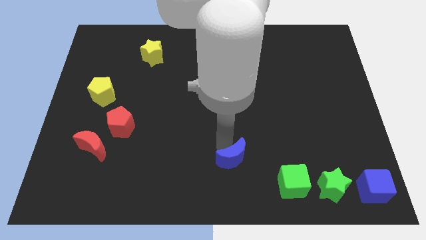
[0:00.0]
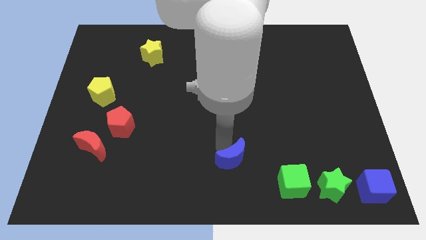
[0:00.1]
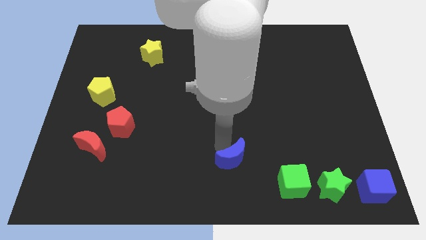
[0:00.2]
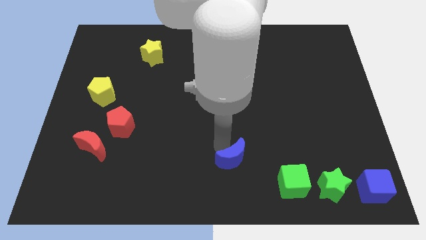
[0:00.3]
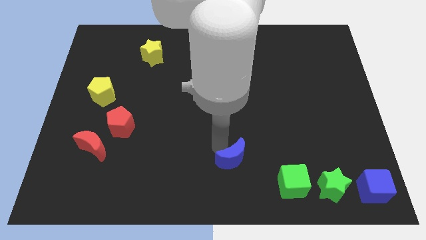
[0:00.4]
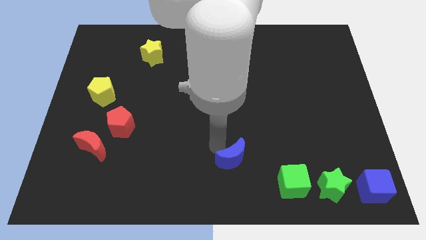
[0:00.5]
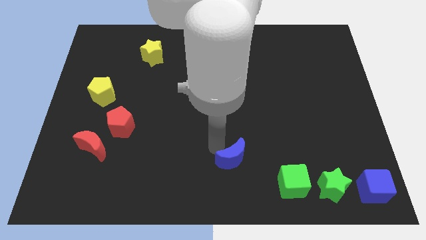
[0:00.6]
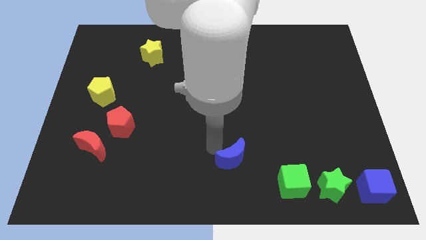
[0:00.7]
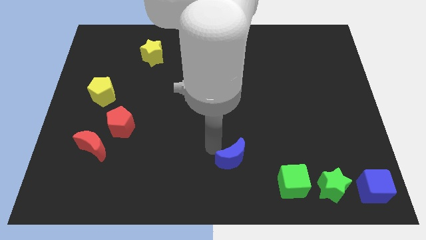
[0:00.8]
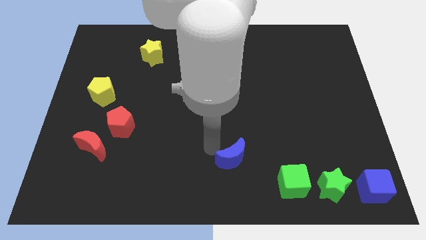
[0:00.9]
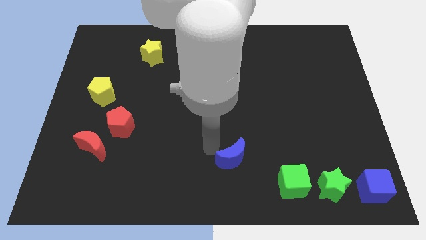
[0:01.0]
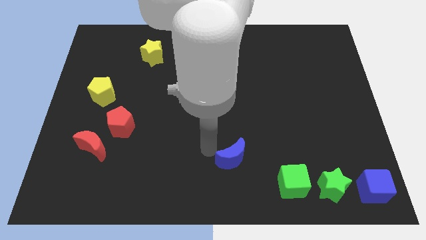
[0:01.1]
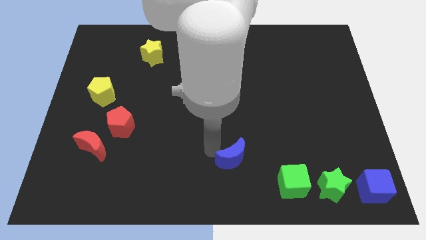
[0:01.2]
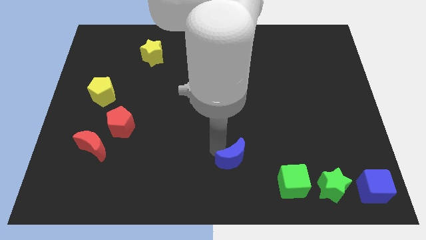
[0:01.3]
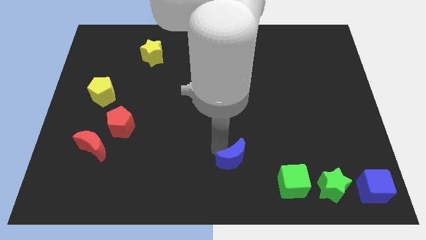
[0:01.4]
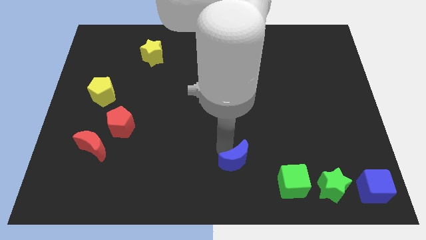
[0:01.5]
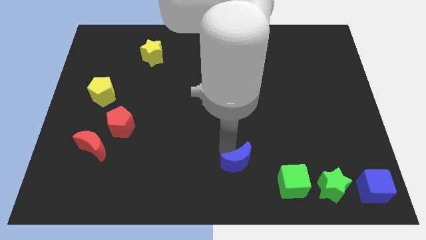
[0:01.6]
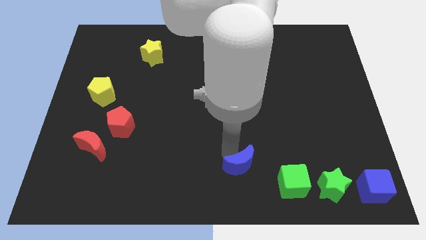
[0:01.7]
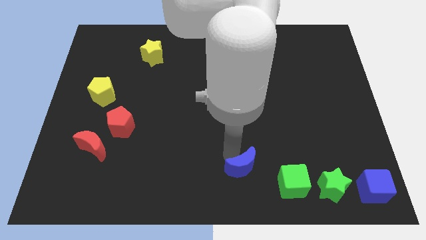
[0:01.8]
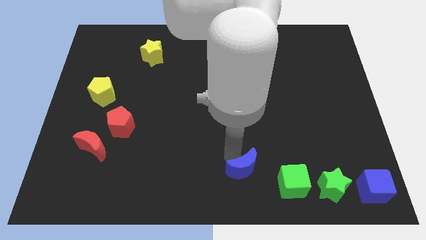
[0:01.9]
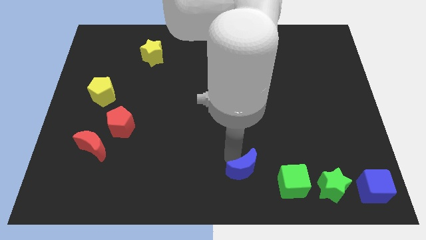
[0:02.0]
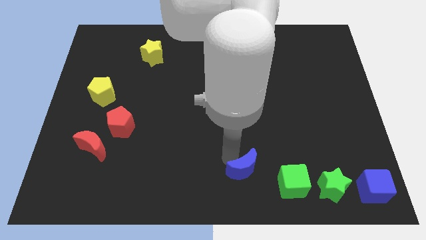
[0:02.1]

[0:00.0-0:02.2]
move the blue moon towards the green cube

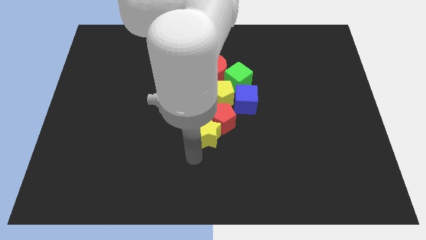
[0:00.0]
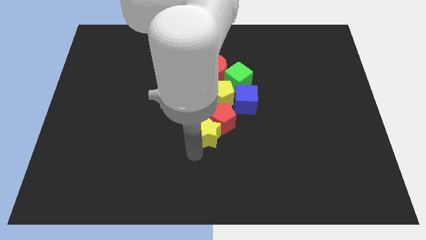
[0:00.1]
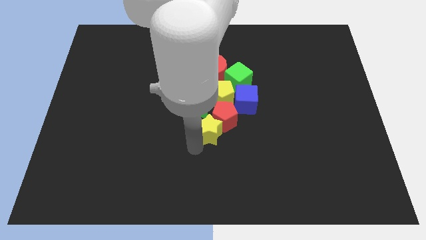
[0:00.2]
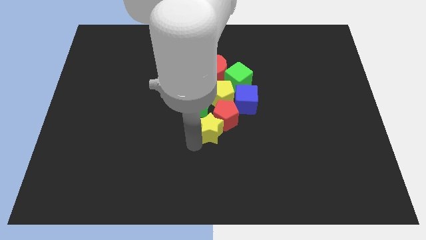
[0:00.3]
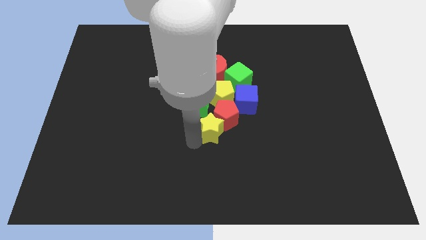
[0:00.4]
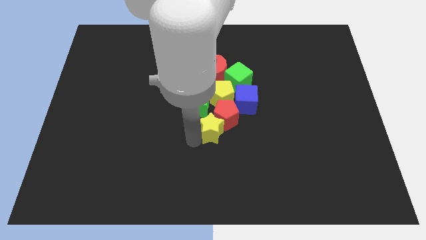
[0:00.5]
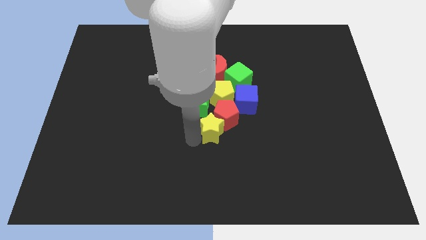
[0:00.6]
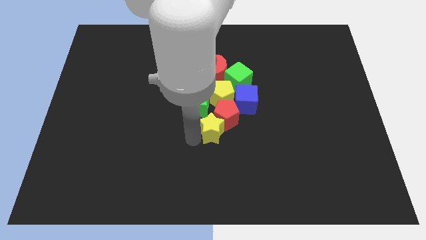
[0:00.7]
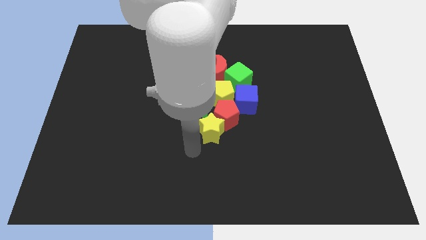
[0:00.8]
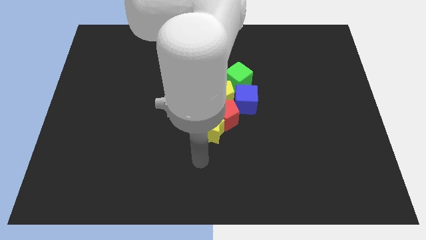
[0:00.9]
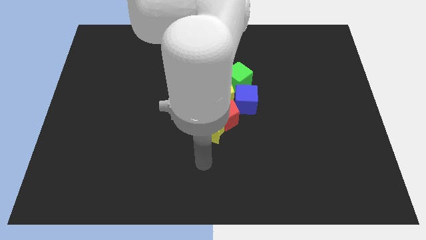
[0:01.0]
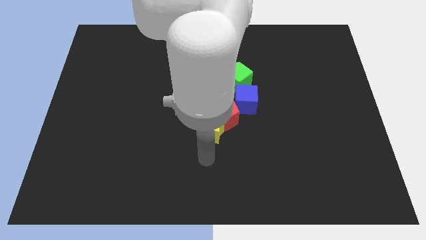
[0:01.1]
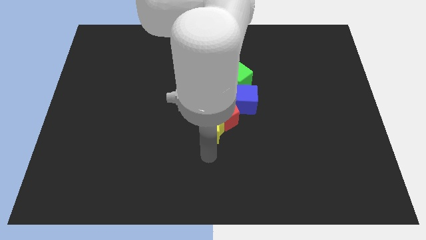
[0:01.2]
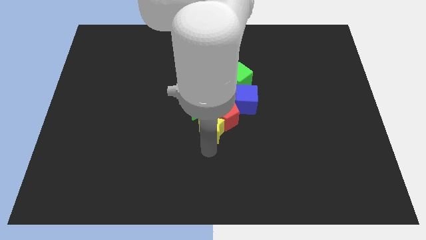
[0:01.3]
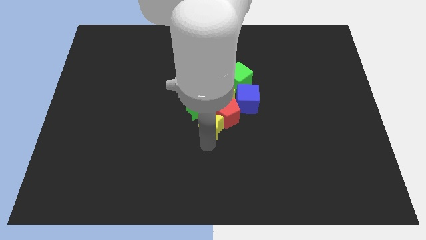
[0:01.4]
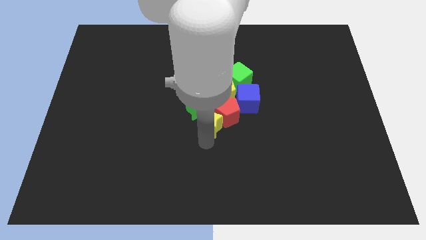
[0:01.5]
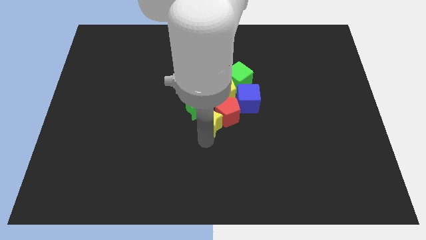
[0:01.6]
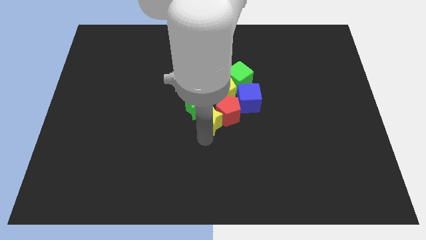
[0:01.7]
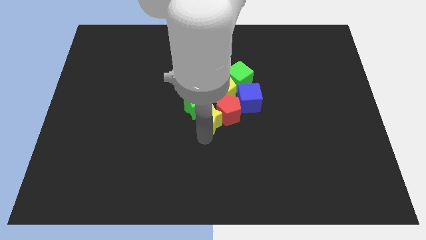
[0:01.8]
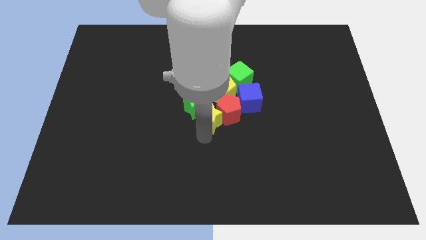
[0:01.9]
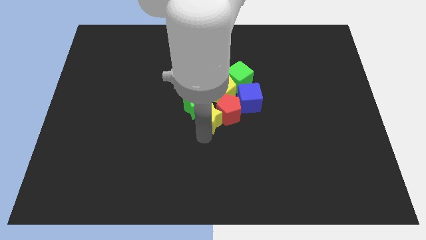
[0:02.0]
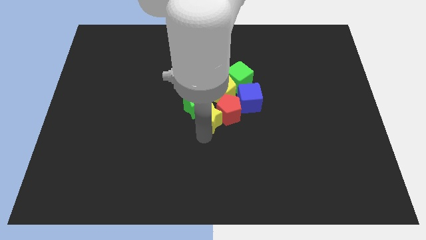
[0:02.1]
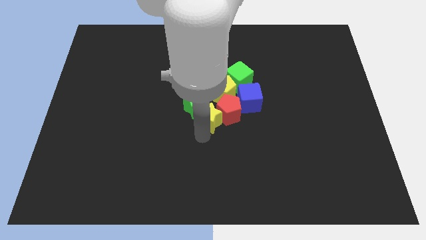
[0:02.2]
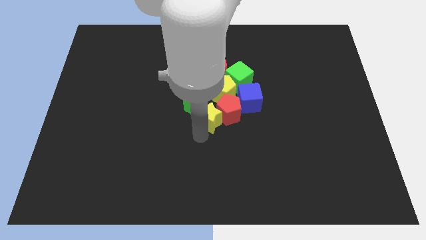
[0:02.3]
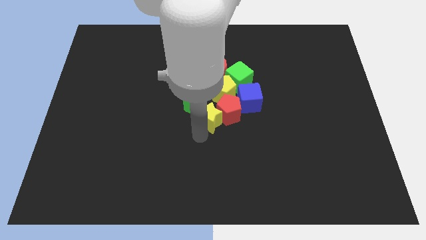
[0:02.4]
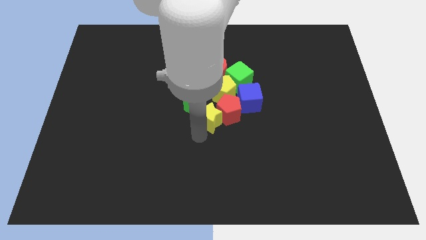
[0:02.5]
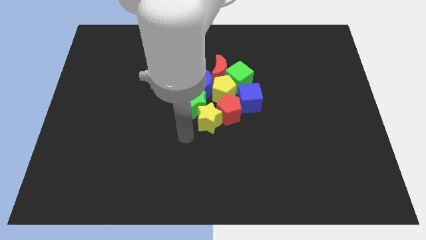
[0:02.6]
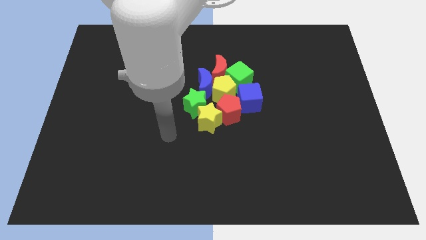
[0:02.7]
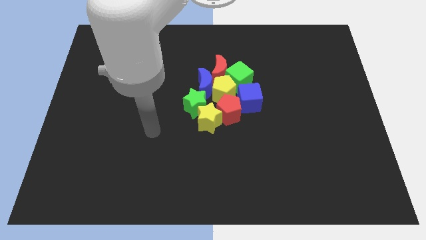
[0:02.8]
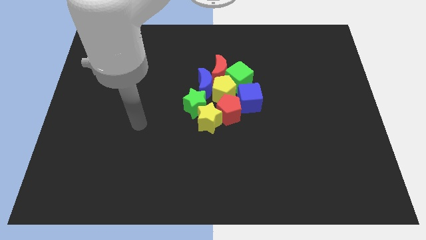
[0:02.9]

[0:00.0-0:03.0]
push the yellow star into the group of blocks

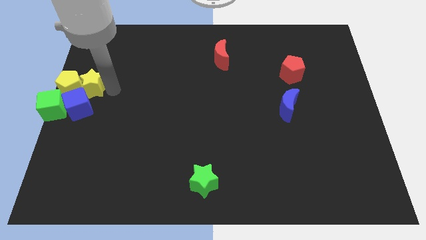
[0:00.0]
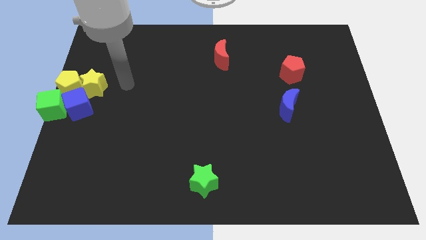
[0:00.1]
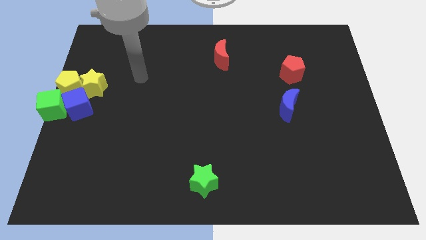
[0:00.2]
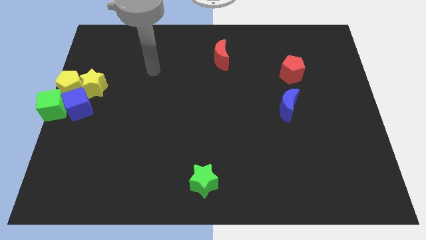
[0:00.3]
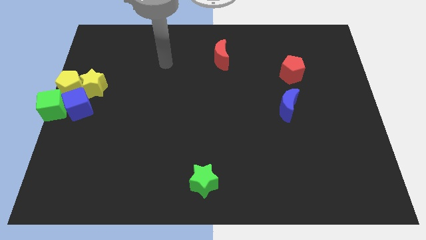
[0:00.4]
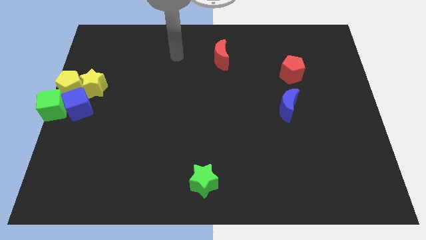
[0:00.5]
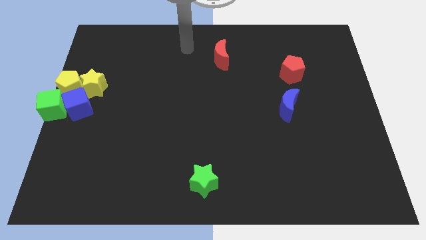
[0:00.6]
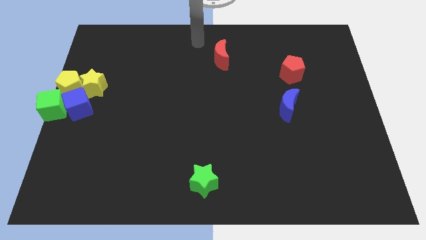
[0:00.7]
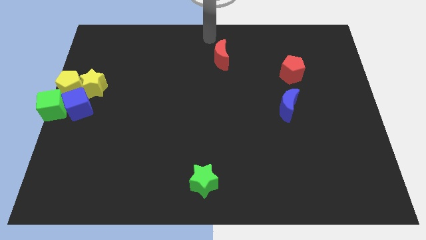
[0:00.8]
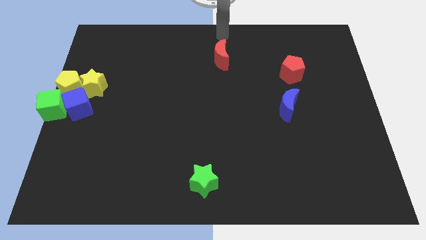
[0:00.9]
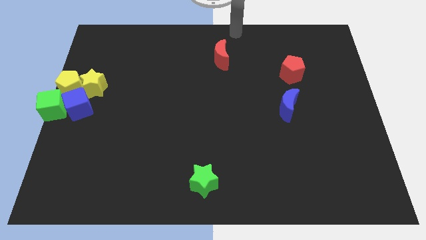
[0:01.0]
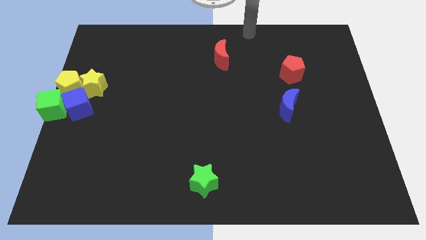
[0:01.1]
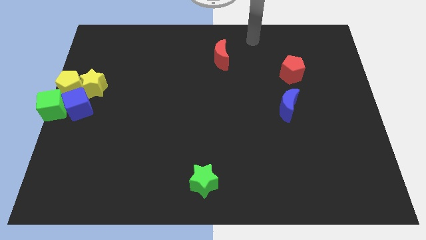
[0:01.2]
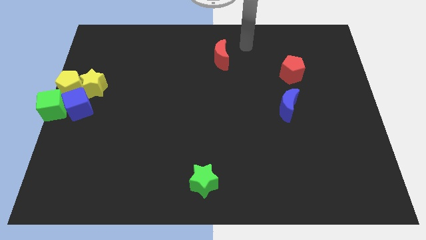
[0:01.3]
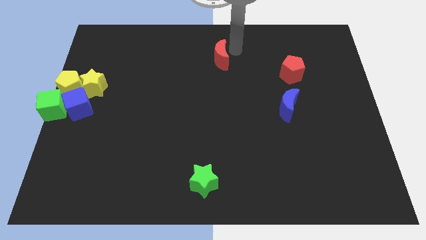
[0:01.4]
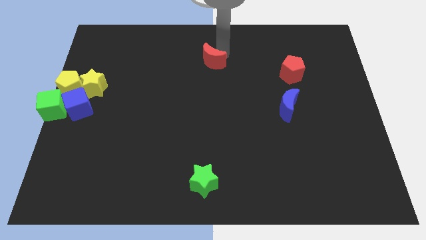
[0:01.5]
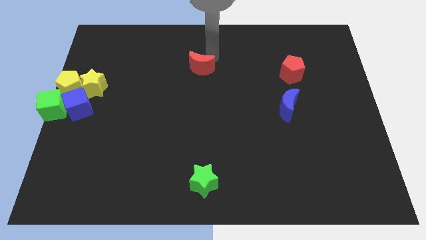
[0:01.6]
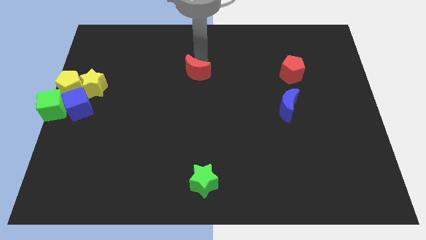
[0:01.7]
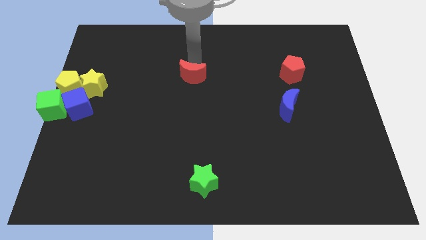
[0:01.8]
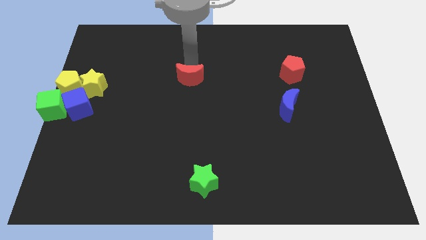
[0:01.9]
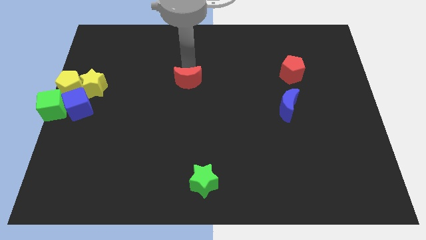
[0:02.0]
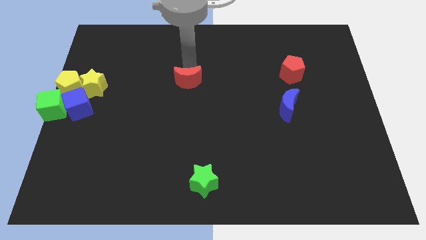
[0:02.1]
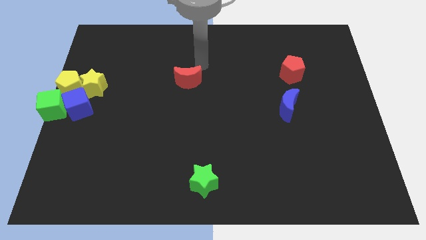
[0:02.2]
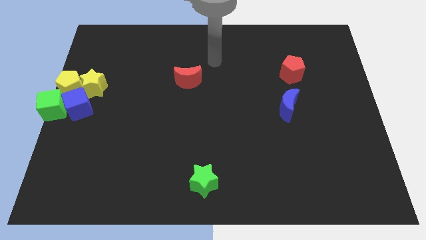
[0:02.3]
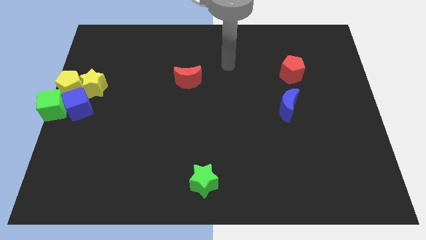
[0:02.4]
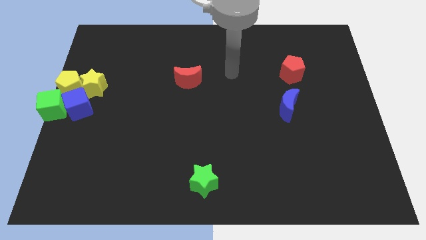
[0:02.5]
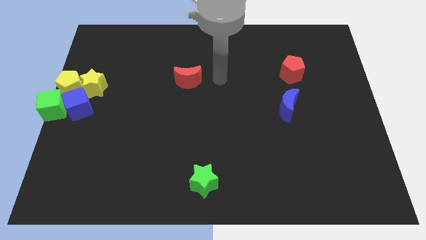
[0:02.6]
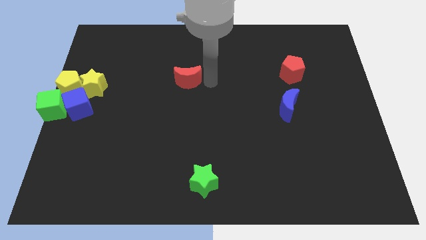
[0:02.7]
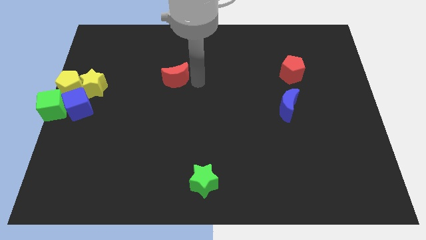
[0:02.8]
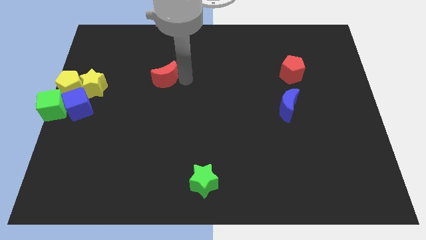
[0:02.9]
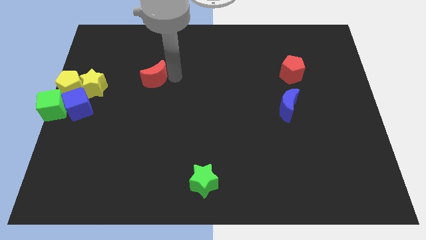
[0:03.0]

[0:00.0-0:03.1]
place the red moon diagonally top right to the yellow star

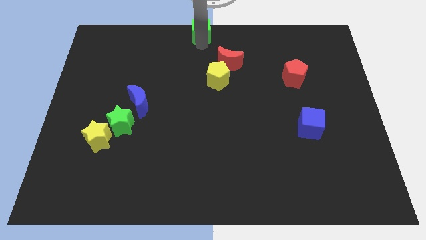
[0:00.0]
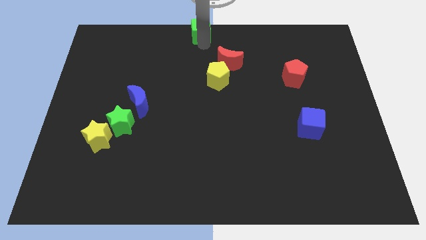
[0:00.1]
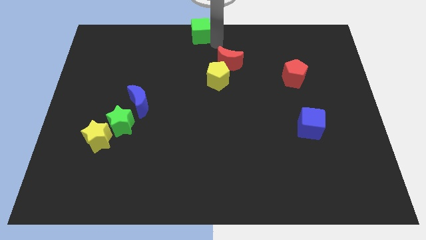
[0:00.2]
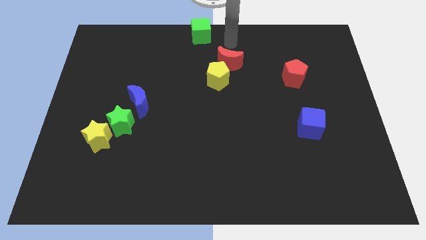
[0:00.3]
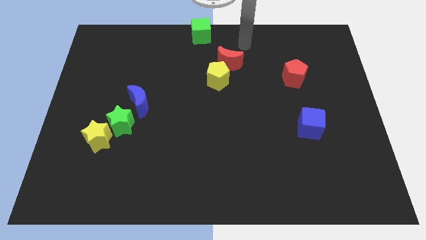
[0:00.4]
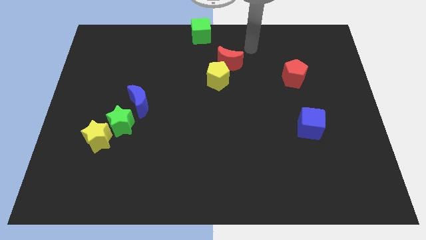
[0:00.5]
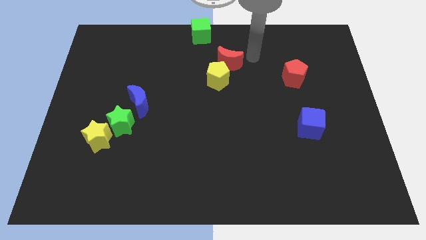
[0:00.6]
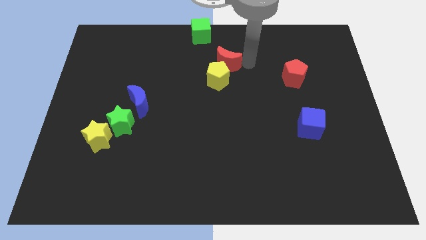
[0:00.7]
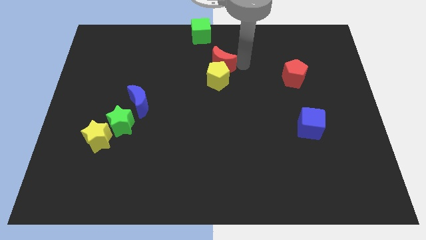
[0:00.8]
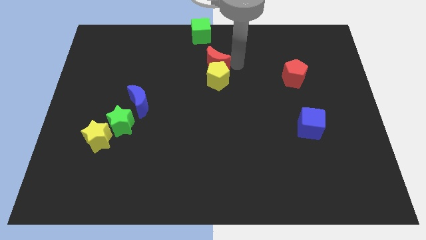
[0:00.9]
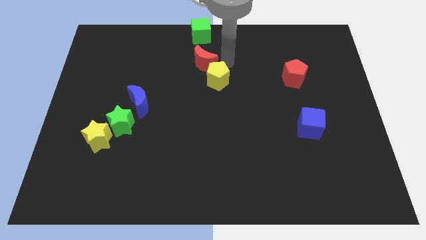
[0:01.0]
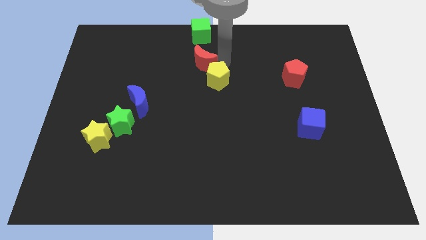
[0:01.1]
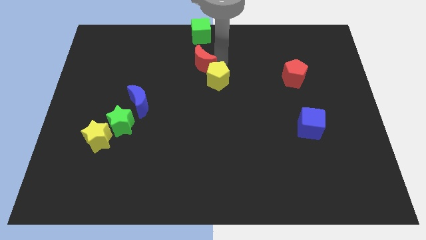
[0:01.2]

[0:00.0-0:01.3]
move the red crescent to the bottom of the green cube
